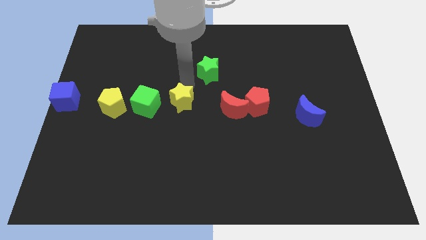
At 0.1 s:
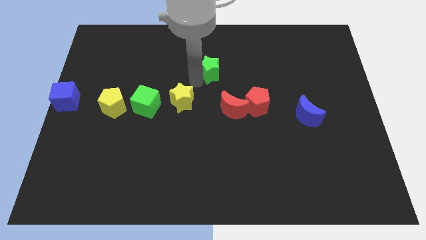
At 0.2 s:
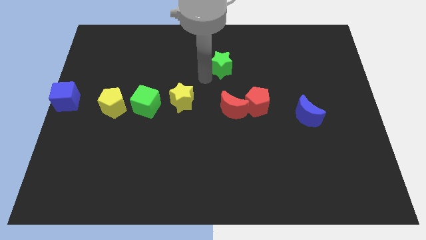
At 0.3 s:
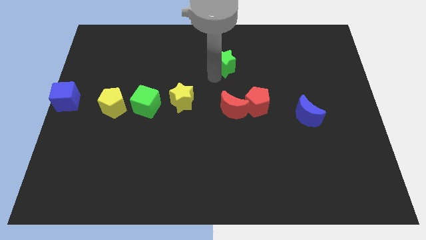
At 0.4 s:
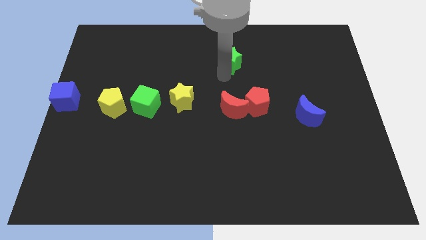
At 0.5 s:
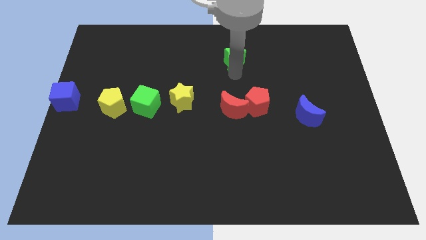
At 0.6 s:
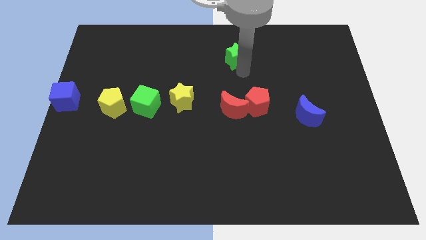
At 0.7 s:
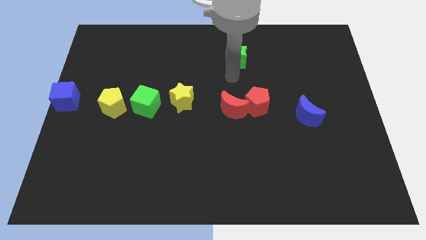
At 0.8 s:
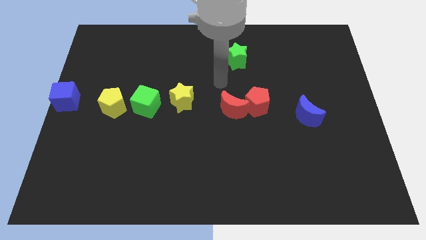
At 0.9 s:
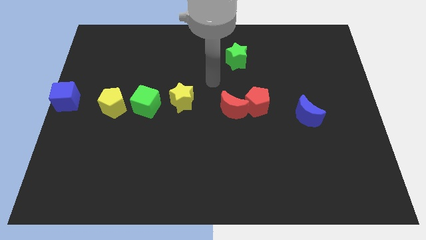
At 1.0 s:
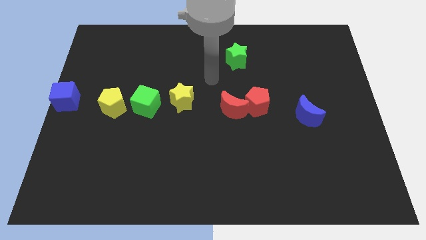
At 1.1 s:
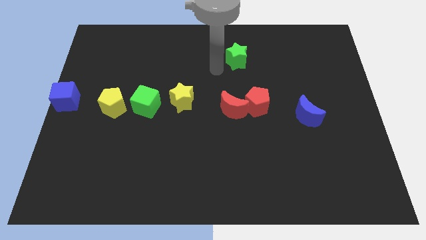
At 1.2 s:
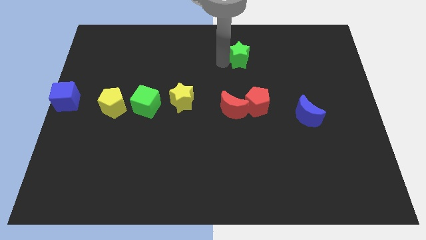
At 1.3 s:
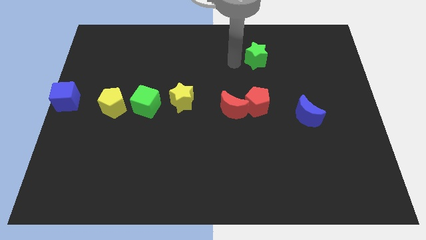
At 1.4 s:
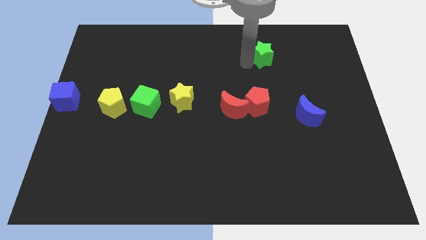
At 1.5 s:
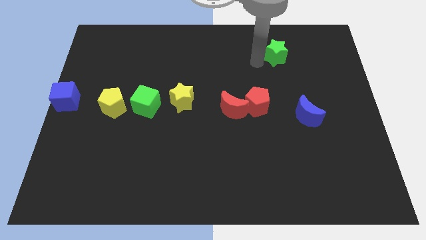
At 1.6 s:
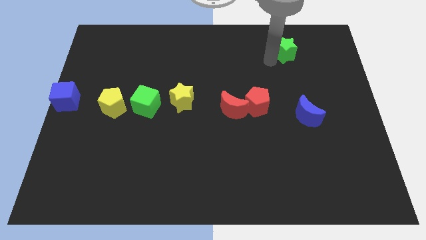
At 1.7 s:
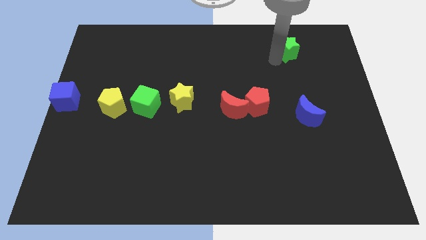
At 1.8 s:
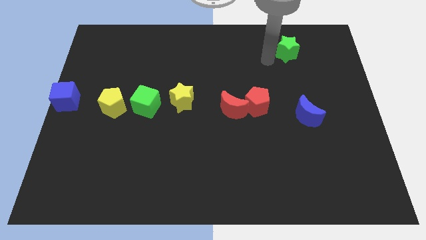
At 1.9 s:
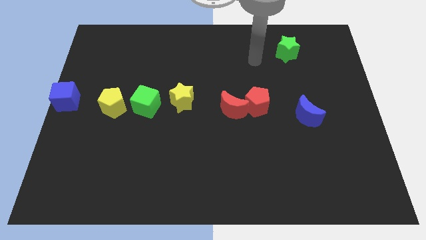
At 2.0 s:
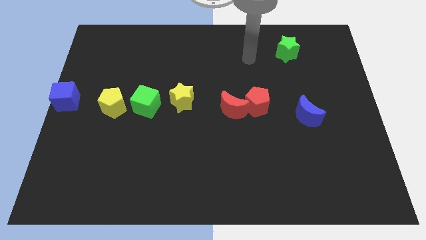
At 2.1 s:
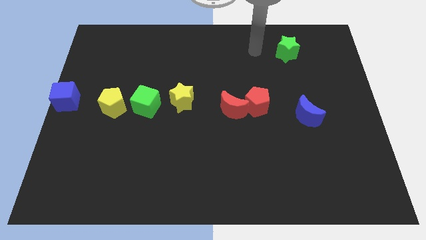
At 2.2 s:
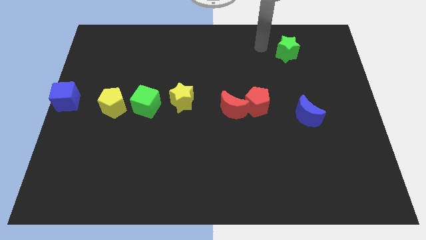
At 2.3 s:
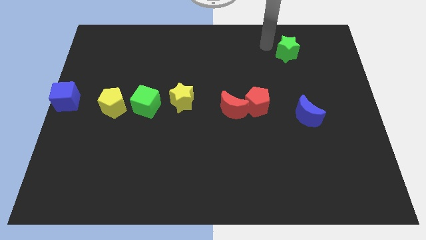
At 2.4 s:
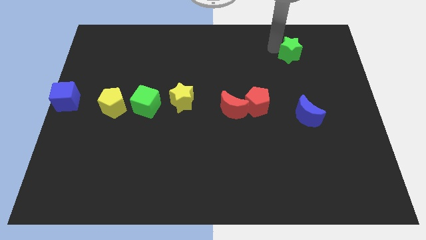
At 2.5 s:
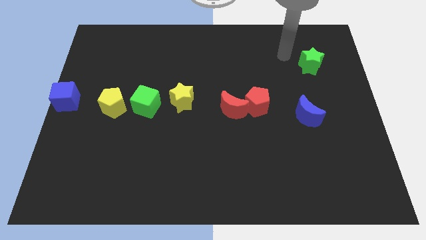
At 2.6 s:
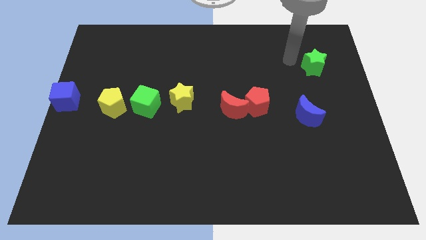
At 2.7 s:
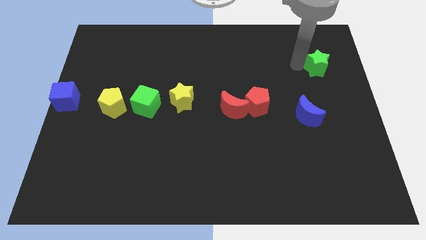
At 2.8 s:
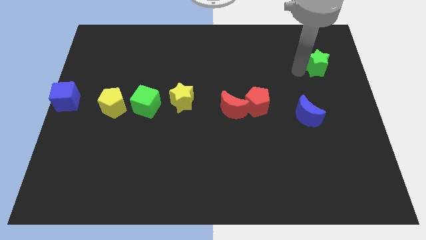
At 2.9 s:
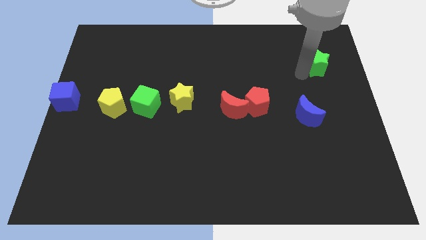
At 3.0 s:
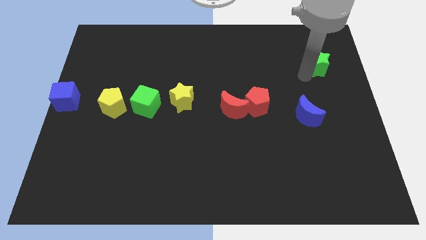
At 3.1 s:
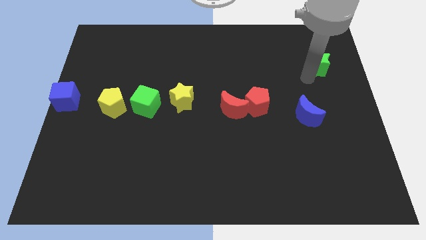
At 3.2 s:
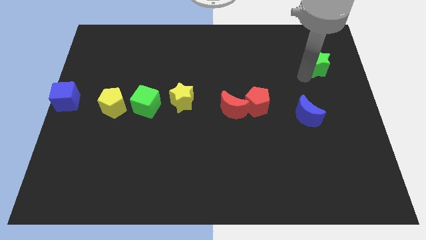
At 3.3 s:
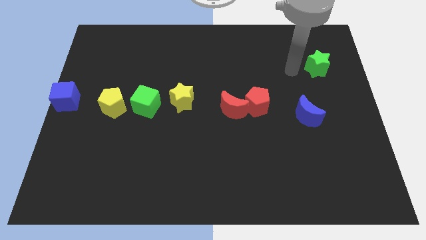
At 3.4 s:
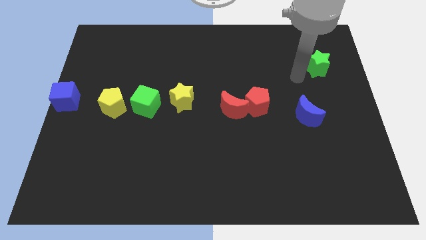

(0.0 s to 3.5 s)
place the green star above the blue crescent

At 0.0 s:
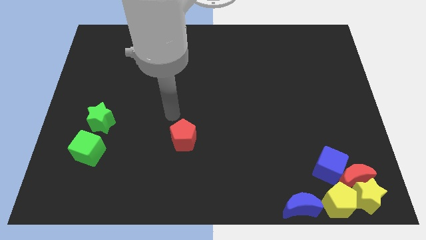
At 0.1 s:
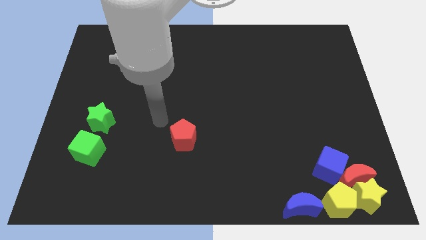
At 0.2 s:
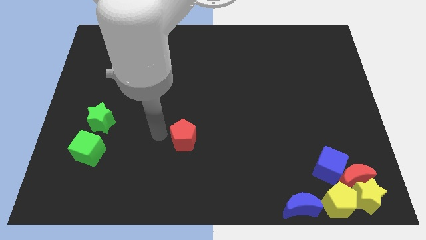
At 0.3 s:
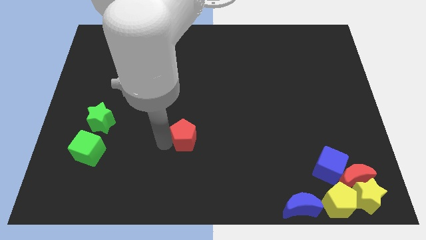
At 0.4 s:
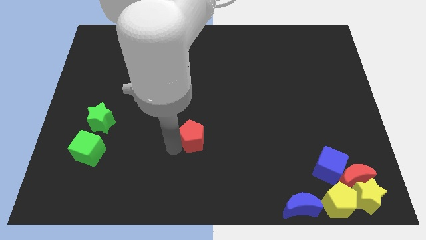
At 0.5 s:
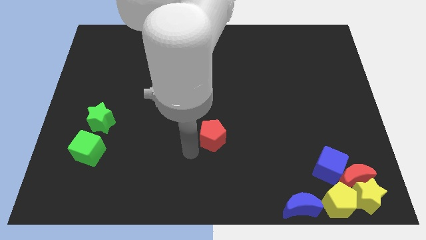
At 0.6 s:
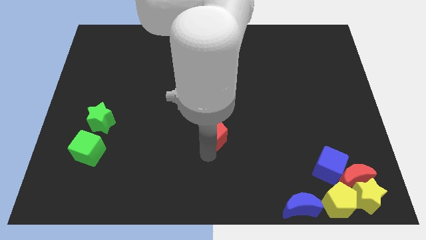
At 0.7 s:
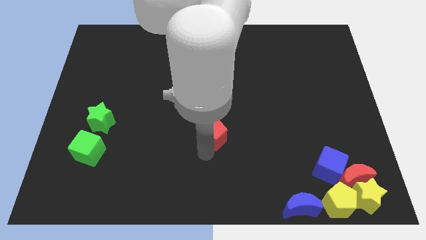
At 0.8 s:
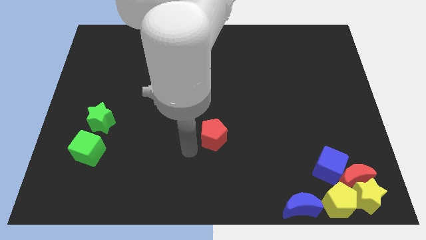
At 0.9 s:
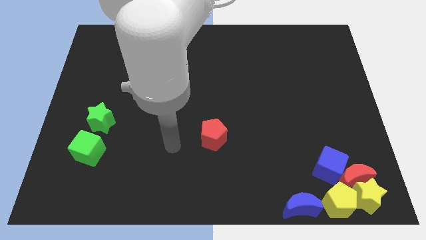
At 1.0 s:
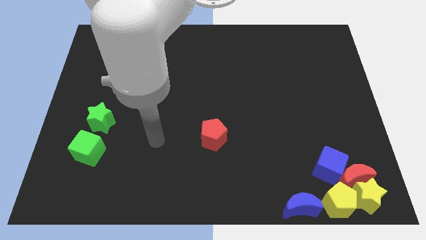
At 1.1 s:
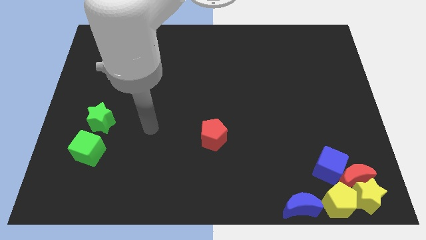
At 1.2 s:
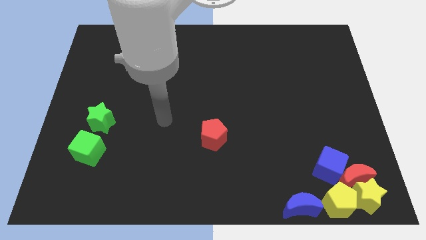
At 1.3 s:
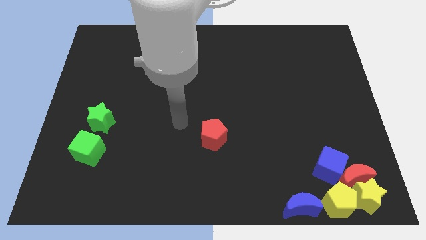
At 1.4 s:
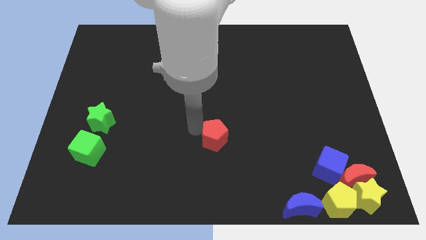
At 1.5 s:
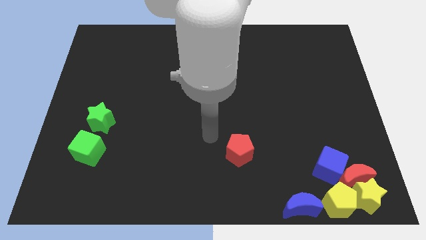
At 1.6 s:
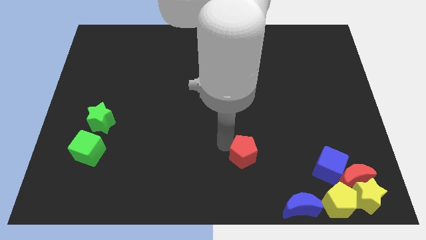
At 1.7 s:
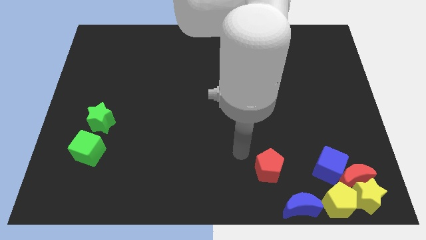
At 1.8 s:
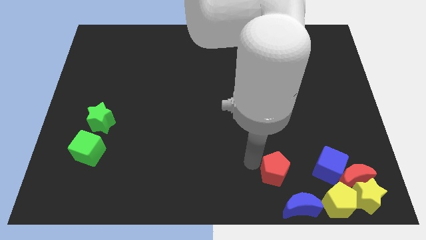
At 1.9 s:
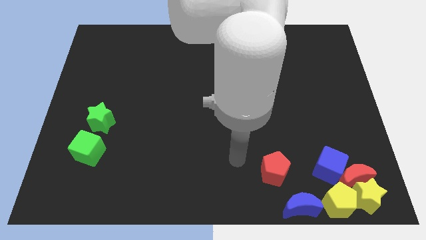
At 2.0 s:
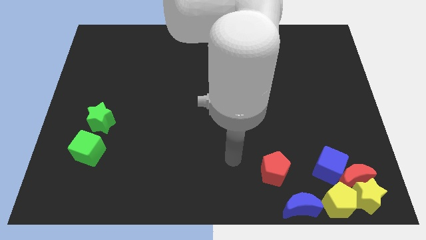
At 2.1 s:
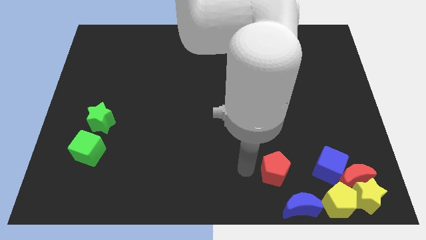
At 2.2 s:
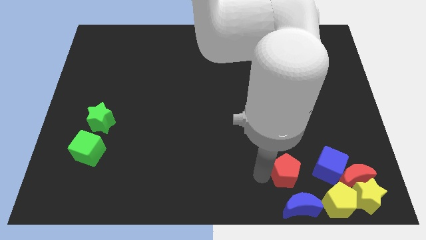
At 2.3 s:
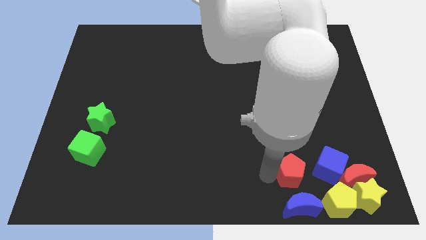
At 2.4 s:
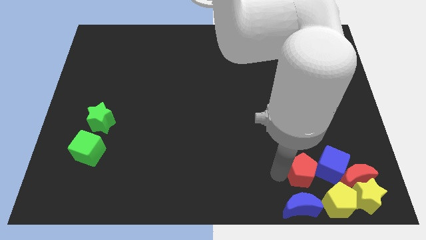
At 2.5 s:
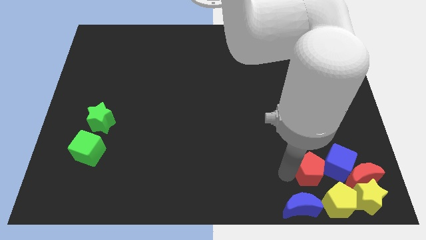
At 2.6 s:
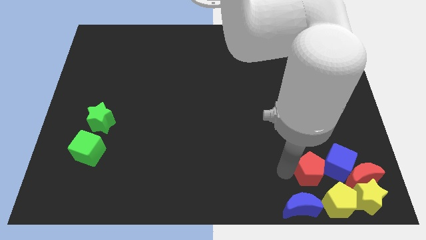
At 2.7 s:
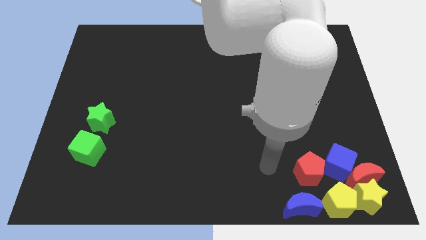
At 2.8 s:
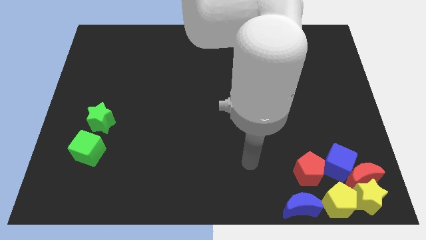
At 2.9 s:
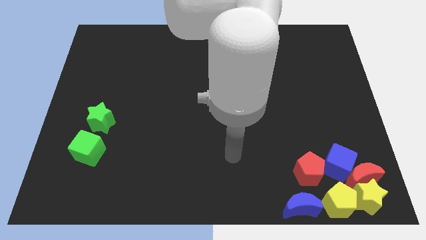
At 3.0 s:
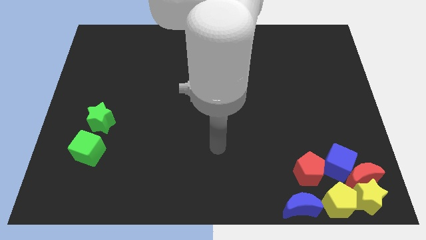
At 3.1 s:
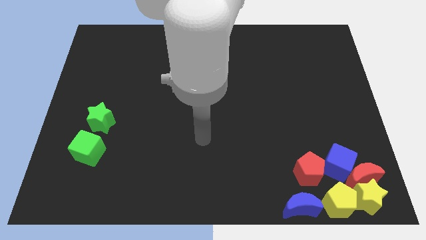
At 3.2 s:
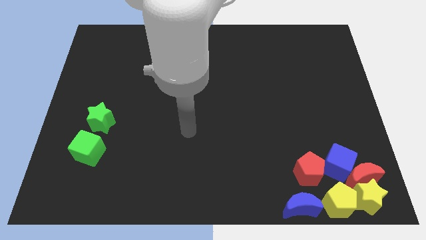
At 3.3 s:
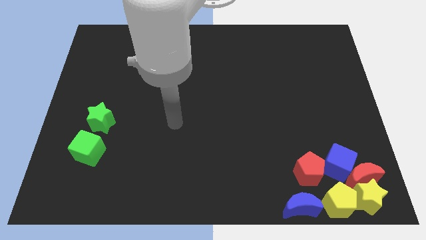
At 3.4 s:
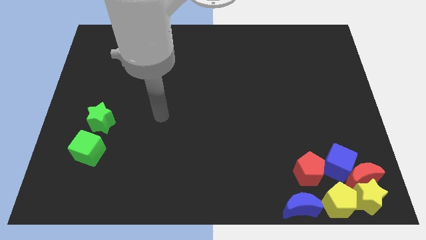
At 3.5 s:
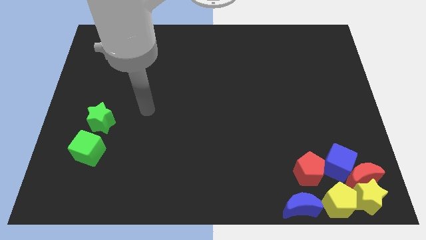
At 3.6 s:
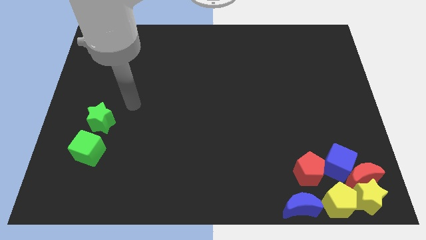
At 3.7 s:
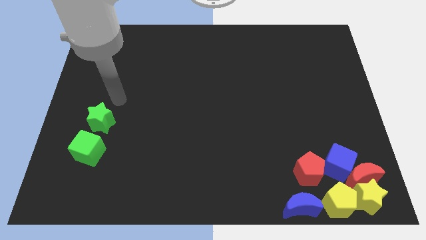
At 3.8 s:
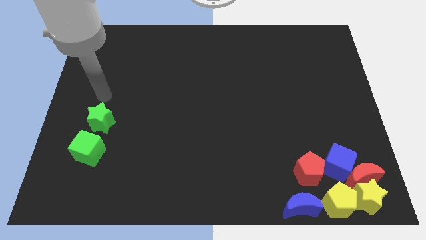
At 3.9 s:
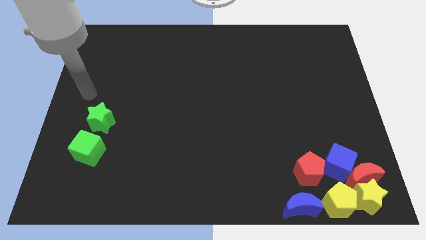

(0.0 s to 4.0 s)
push the red pentagon into the blue cube

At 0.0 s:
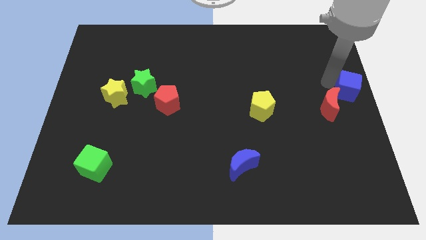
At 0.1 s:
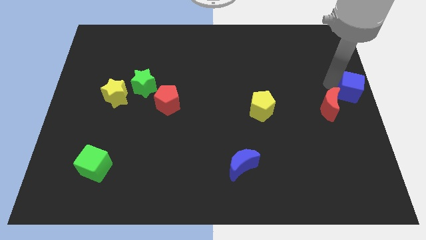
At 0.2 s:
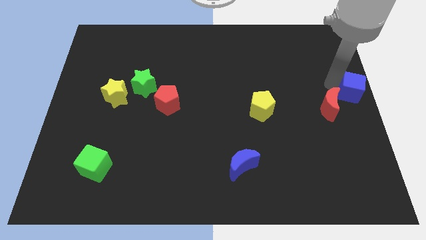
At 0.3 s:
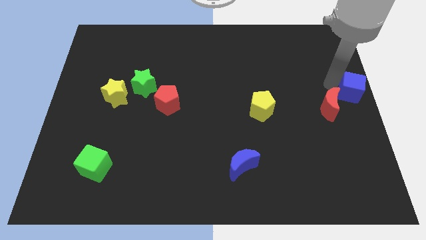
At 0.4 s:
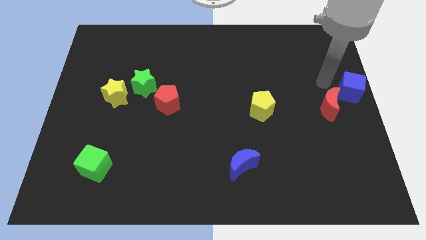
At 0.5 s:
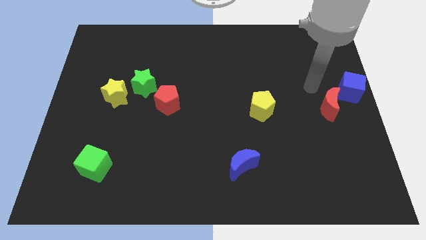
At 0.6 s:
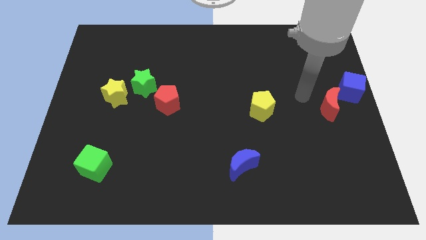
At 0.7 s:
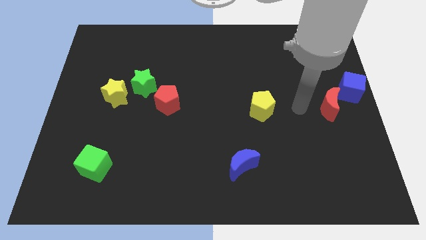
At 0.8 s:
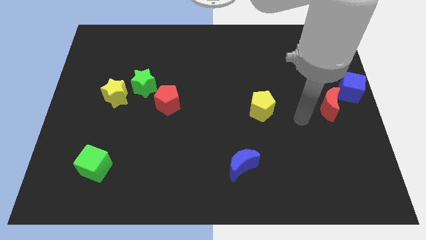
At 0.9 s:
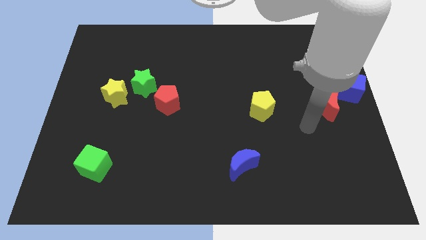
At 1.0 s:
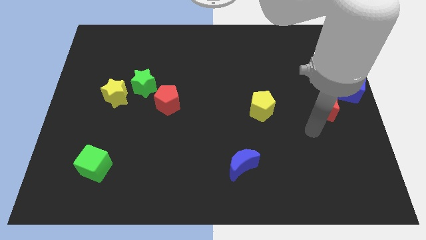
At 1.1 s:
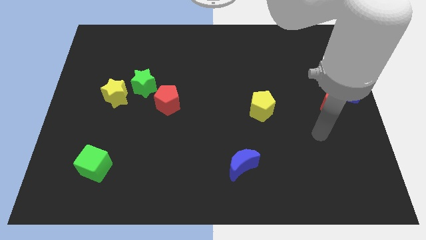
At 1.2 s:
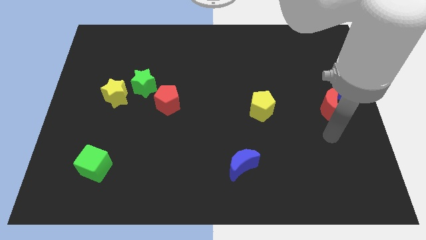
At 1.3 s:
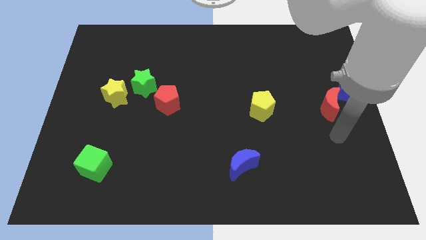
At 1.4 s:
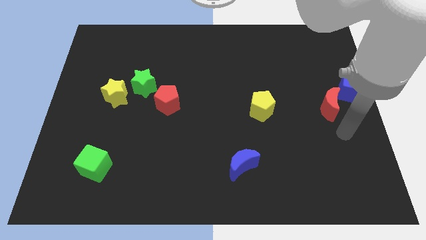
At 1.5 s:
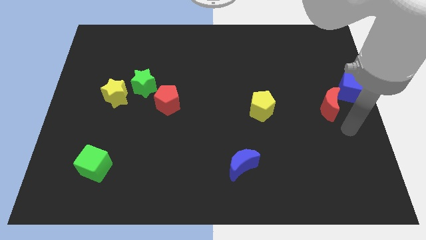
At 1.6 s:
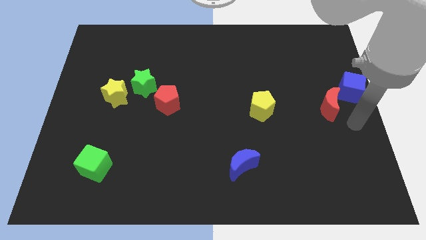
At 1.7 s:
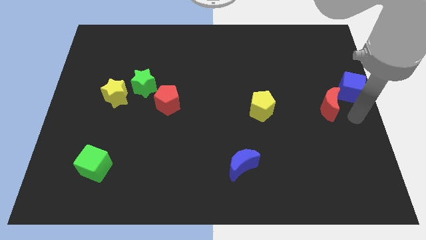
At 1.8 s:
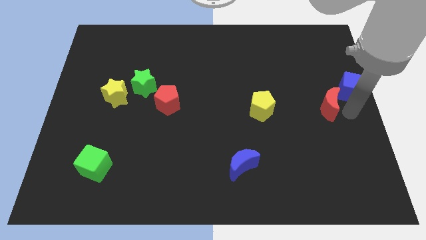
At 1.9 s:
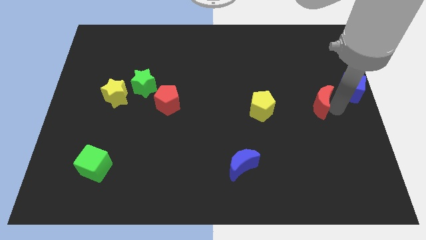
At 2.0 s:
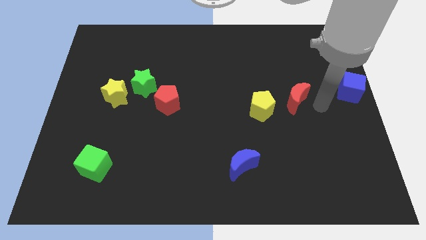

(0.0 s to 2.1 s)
move your arm to the right side of the red crescent
